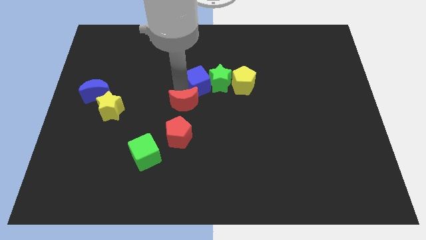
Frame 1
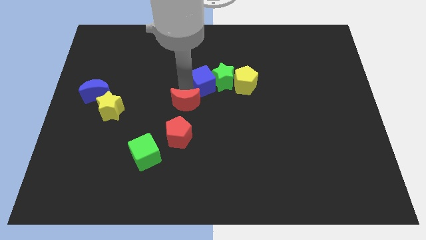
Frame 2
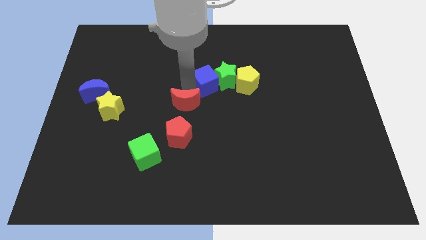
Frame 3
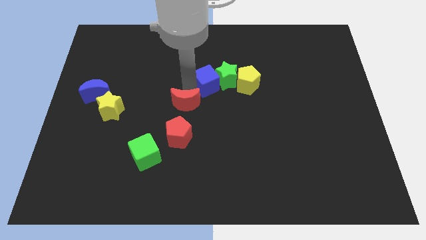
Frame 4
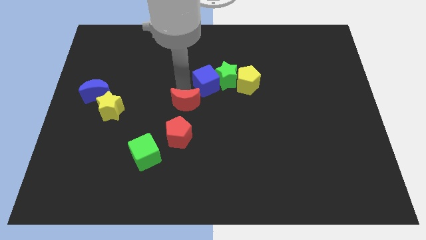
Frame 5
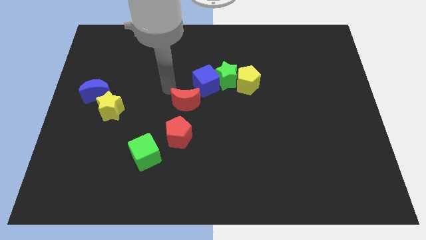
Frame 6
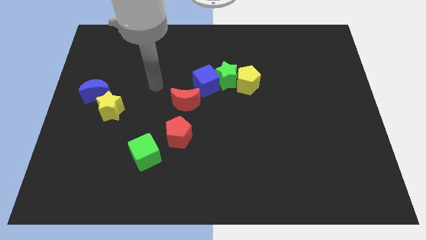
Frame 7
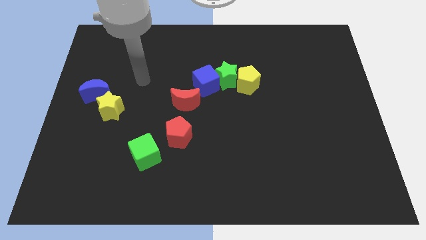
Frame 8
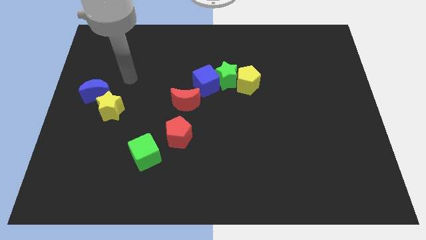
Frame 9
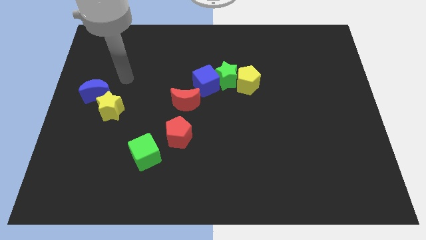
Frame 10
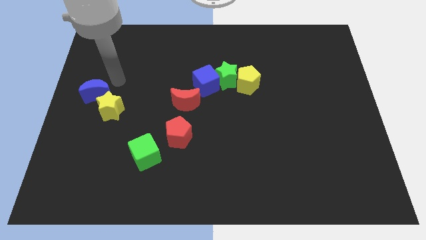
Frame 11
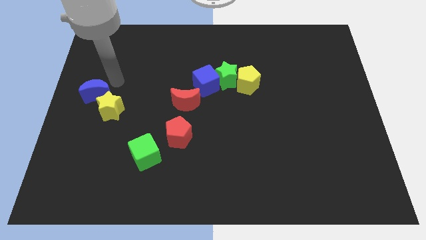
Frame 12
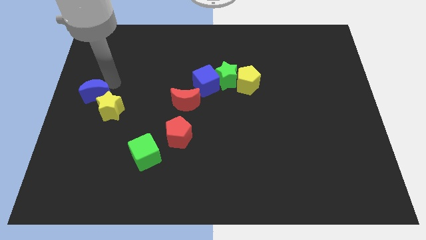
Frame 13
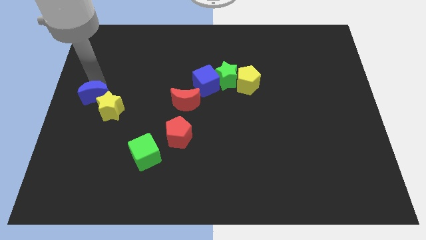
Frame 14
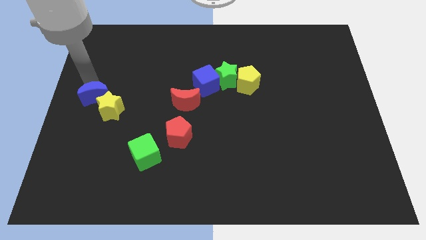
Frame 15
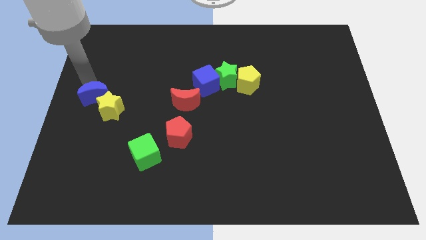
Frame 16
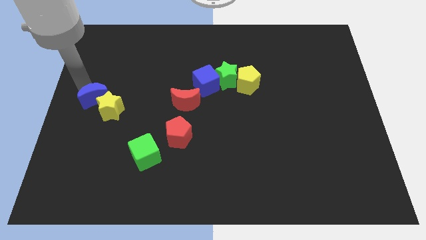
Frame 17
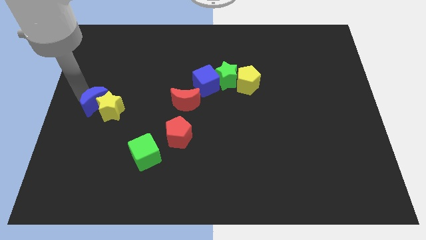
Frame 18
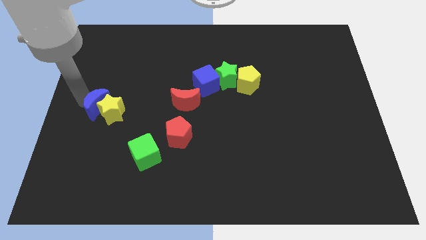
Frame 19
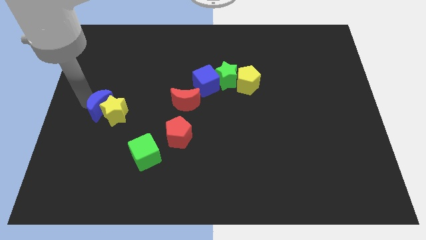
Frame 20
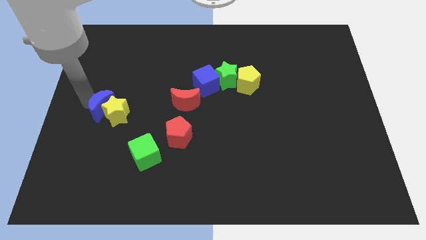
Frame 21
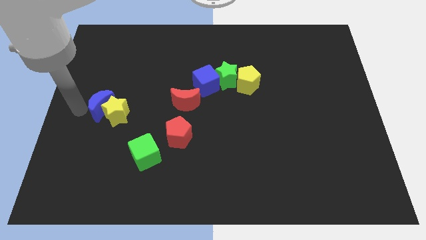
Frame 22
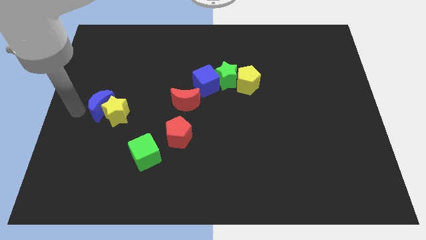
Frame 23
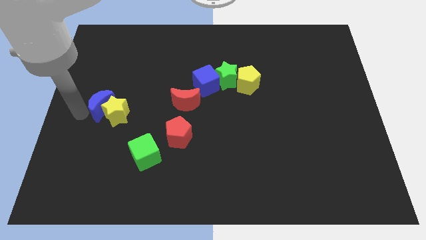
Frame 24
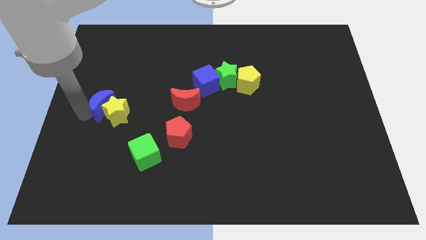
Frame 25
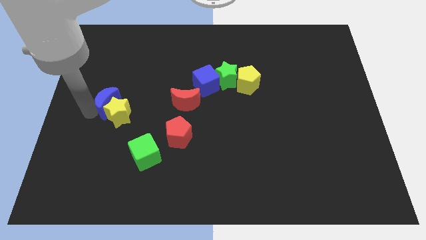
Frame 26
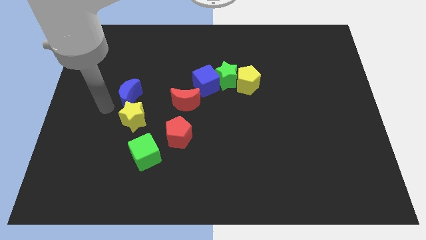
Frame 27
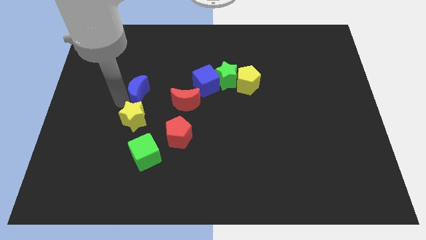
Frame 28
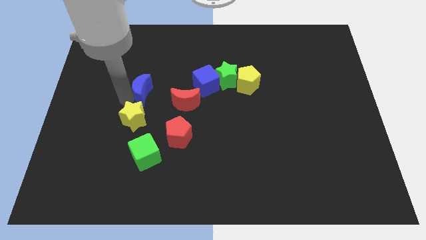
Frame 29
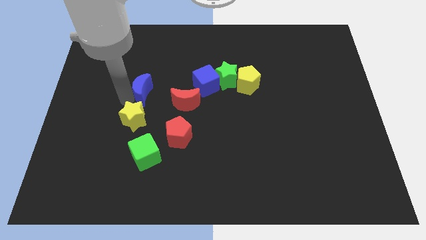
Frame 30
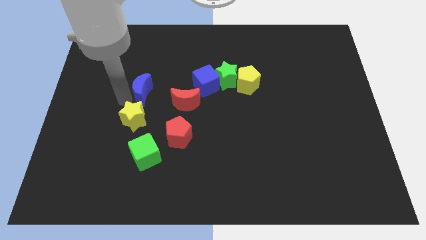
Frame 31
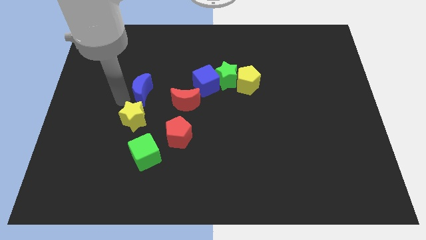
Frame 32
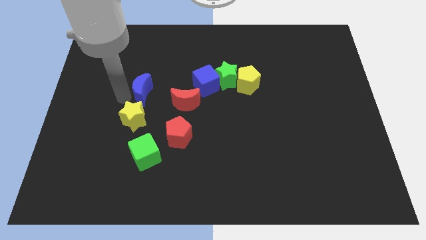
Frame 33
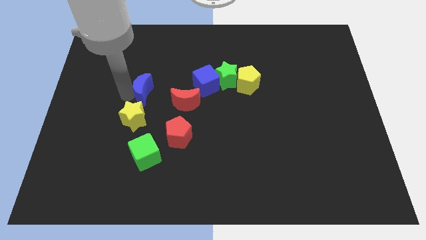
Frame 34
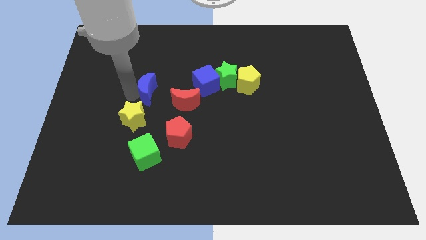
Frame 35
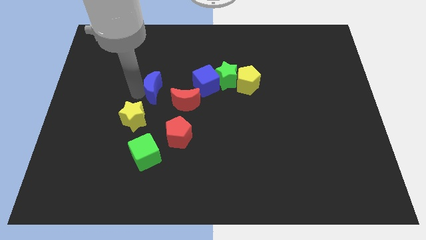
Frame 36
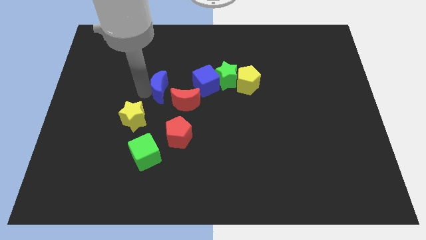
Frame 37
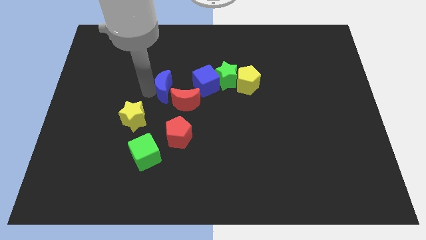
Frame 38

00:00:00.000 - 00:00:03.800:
separate the yellow star and blue moon

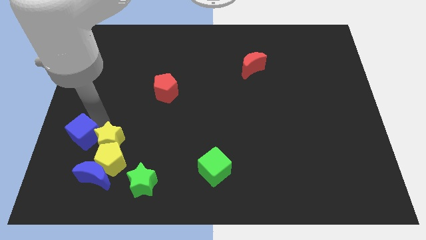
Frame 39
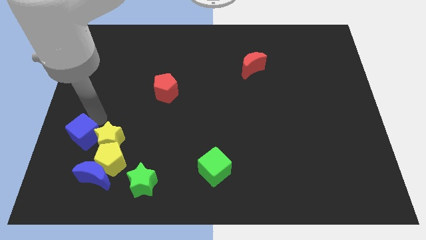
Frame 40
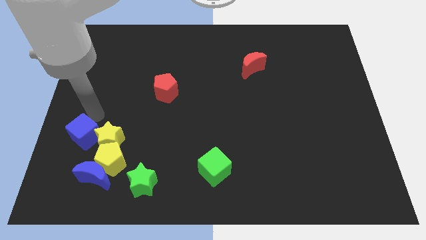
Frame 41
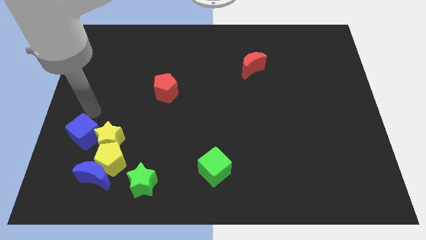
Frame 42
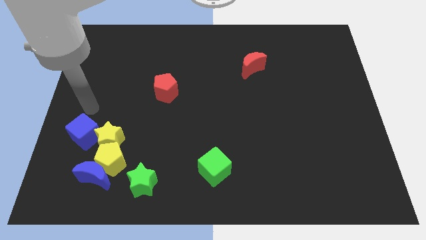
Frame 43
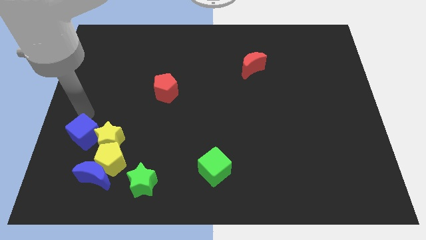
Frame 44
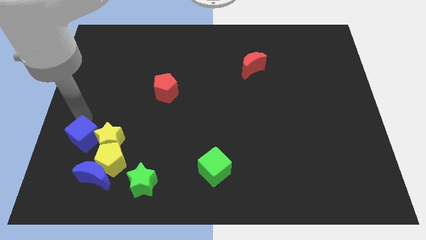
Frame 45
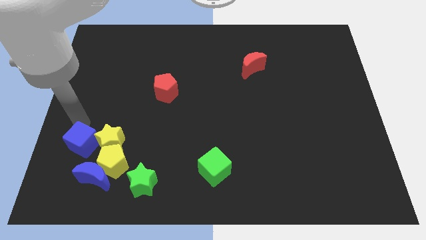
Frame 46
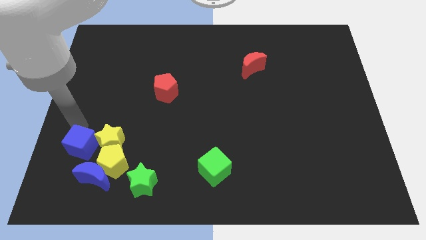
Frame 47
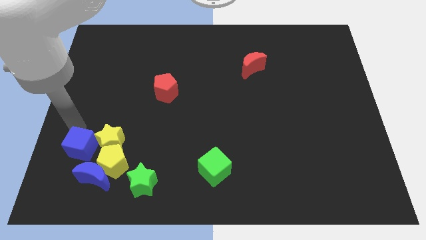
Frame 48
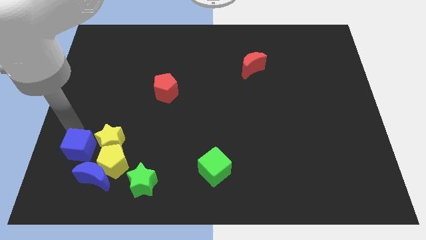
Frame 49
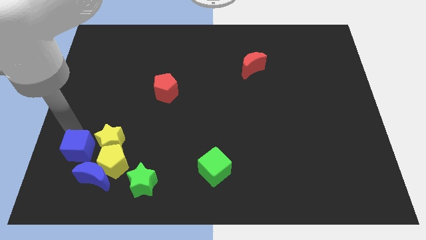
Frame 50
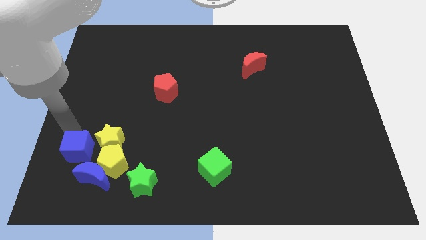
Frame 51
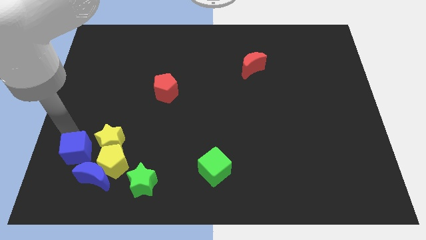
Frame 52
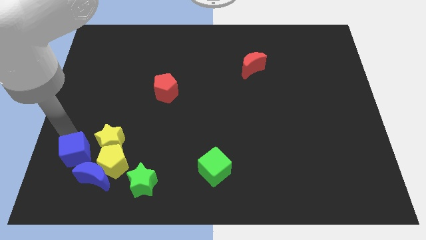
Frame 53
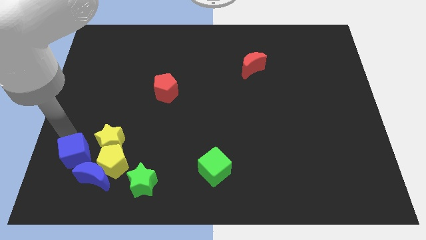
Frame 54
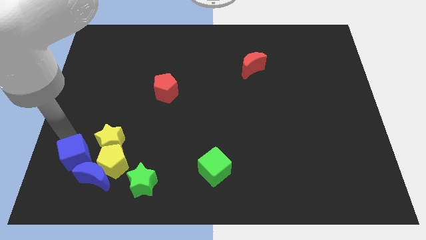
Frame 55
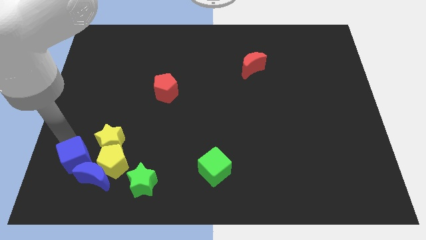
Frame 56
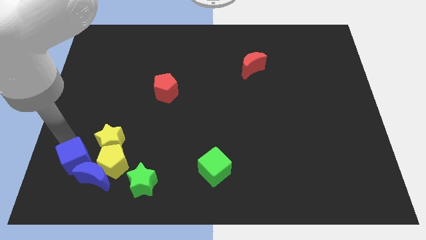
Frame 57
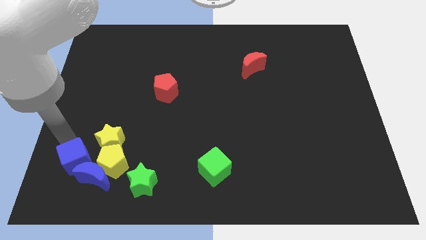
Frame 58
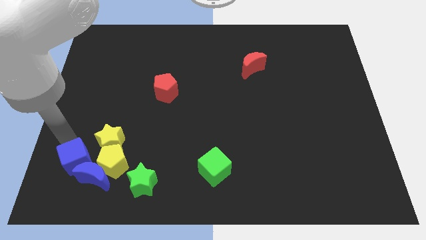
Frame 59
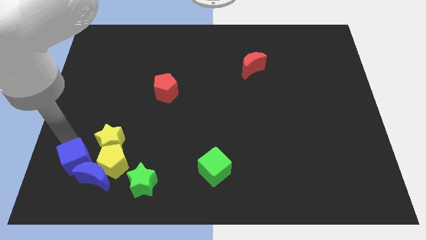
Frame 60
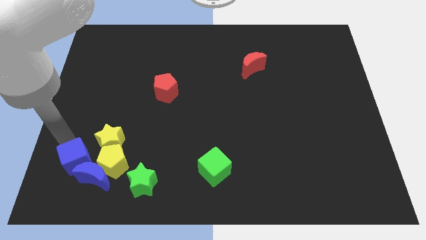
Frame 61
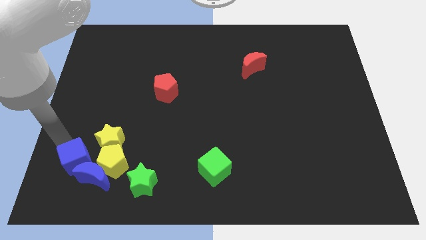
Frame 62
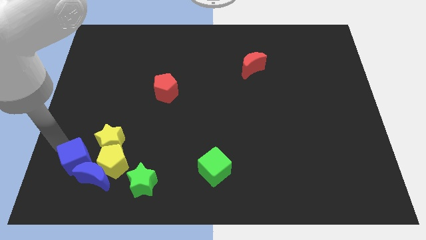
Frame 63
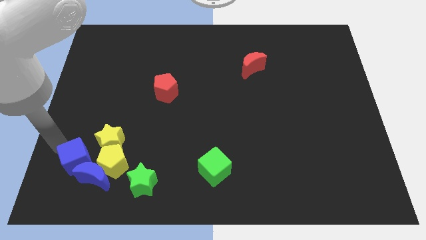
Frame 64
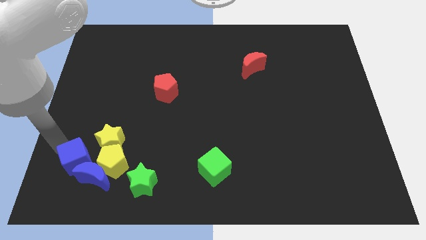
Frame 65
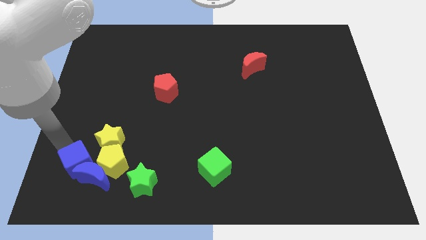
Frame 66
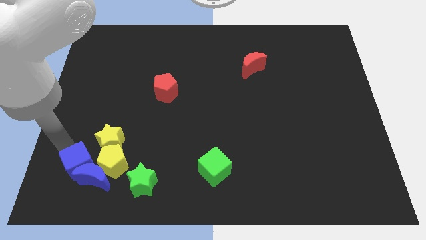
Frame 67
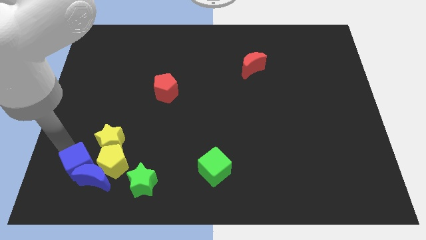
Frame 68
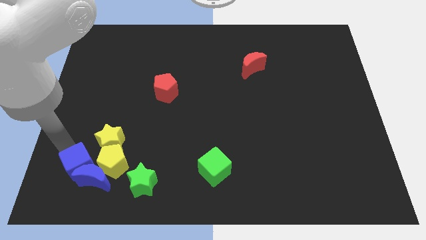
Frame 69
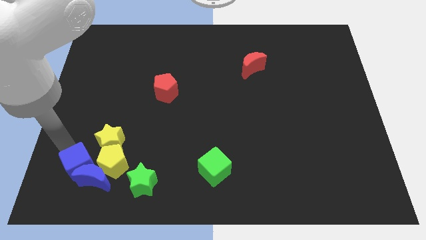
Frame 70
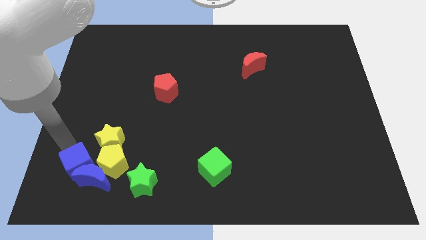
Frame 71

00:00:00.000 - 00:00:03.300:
slide the blue cube into the top left side of the blue moon

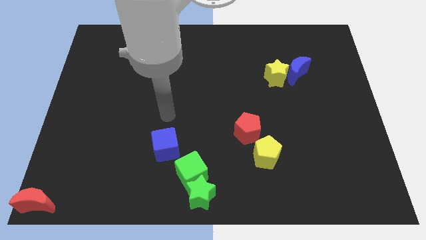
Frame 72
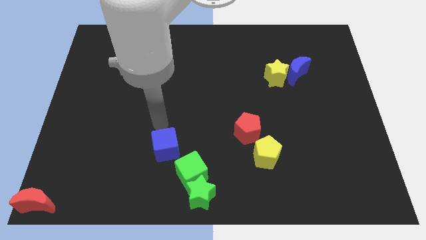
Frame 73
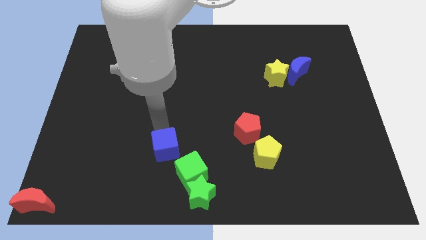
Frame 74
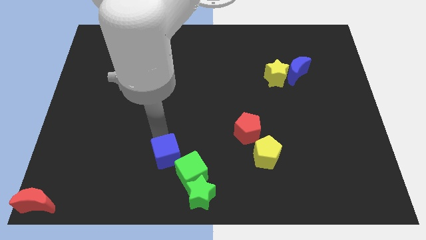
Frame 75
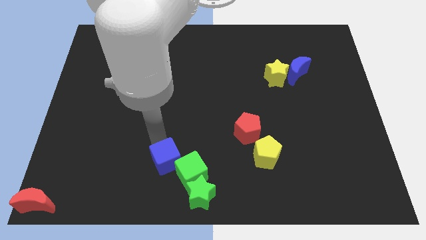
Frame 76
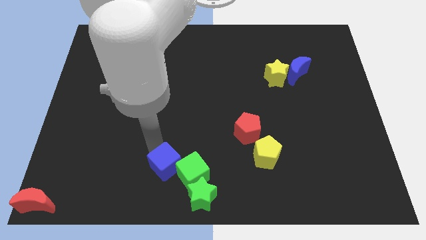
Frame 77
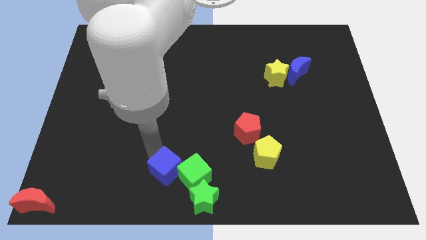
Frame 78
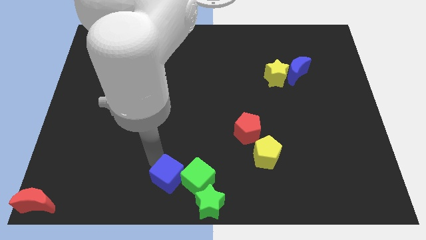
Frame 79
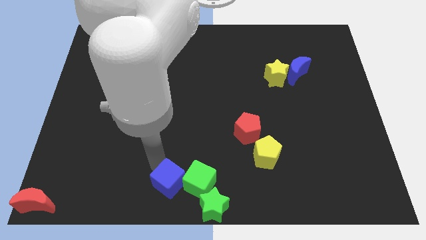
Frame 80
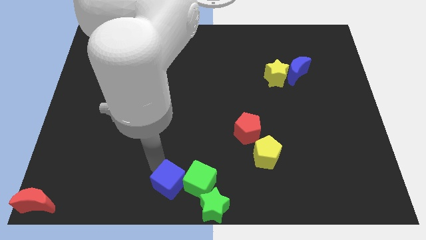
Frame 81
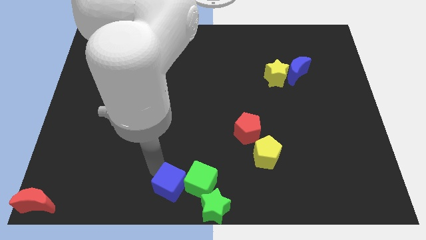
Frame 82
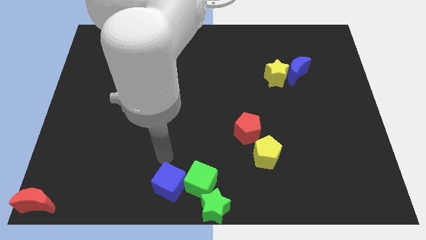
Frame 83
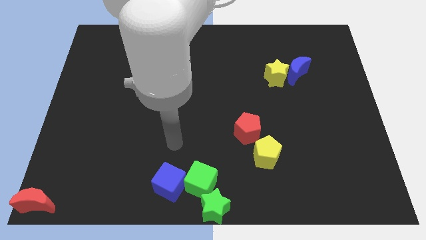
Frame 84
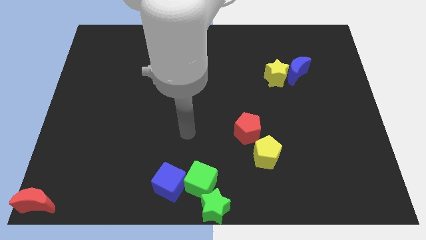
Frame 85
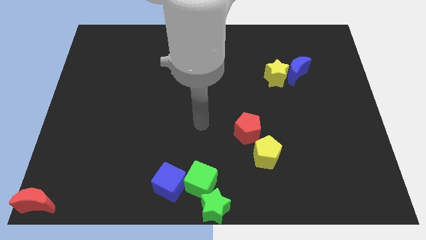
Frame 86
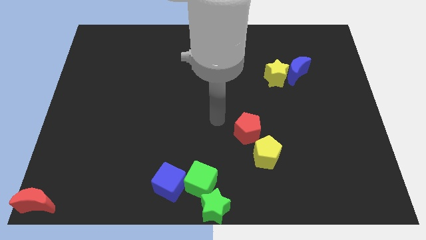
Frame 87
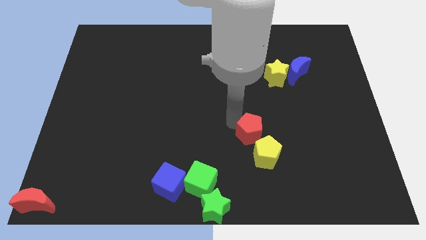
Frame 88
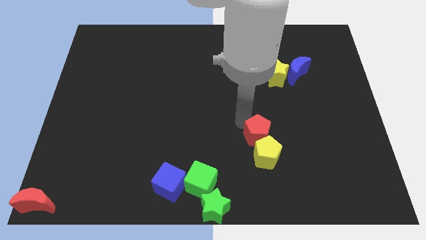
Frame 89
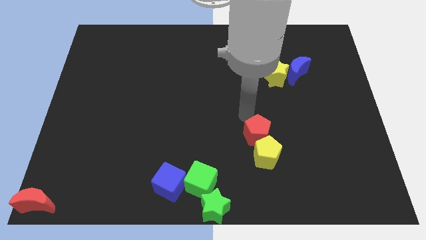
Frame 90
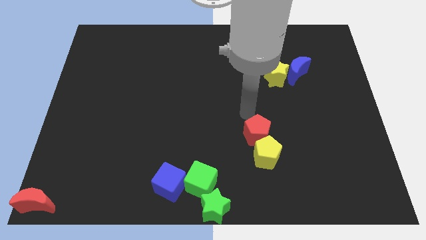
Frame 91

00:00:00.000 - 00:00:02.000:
move the two cubes and green star to the bottom middle of the board
